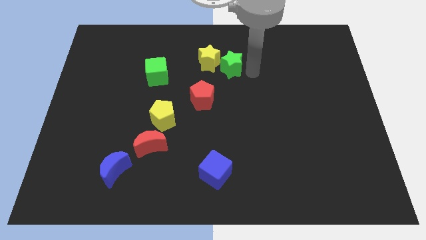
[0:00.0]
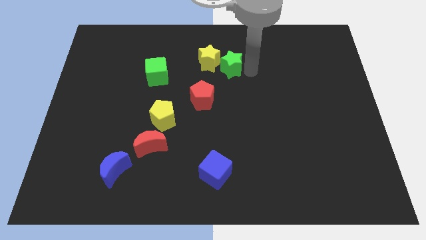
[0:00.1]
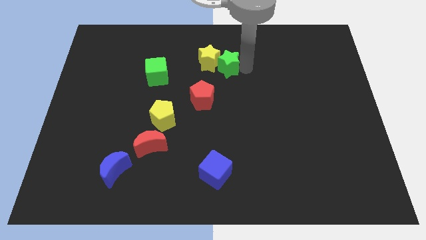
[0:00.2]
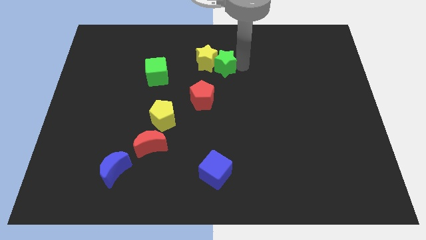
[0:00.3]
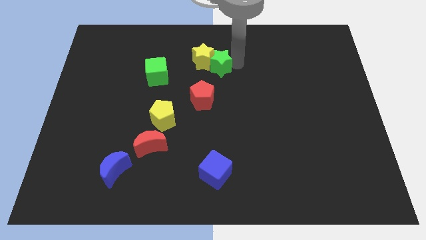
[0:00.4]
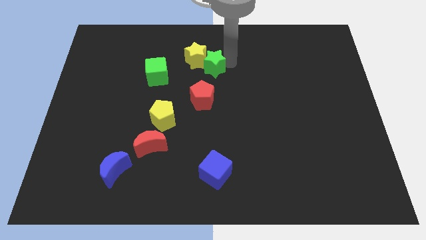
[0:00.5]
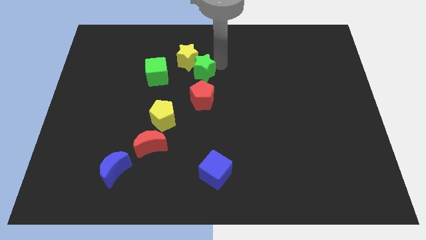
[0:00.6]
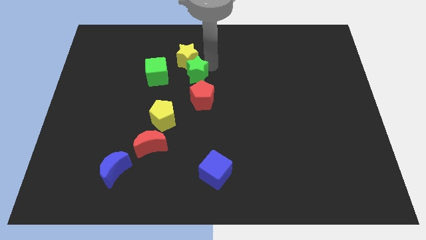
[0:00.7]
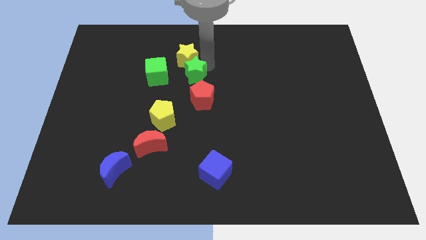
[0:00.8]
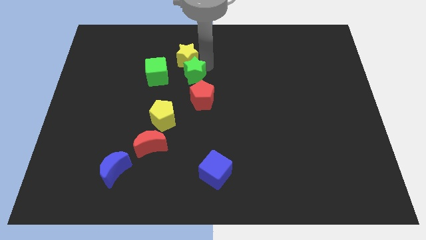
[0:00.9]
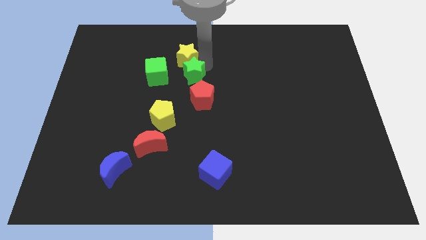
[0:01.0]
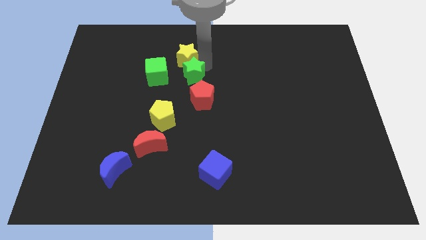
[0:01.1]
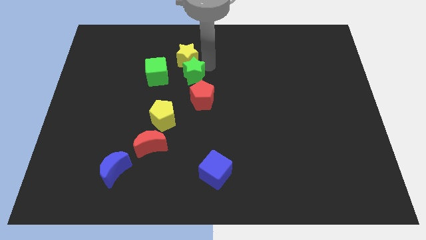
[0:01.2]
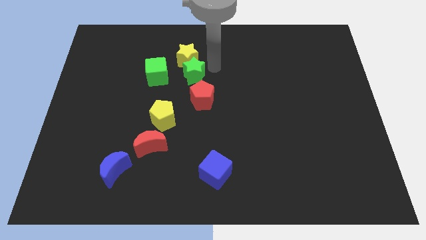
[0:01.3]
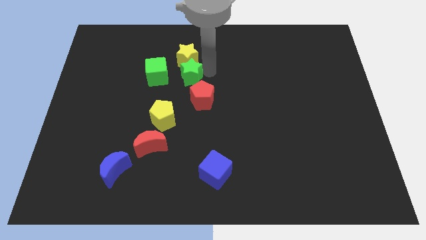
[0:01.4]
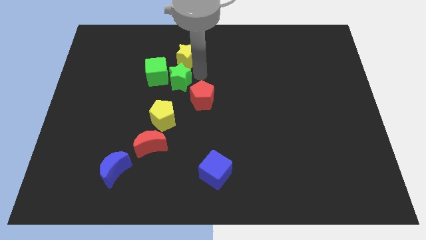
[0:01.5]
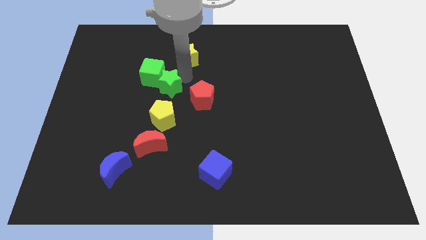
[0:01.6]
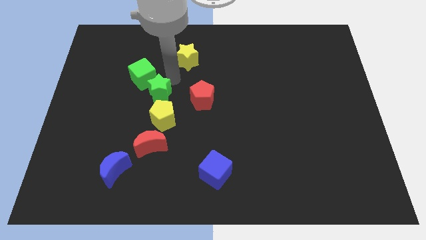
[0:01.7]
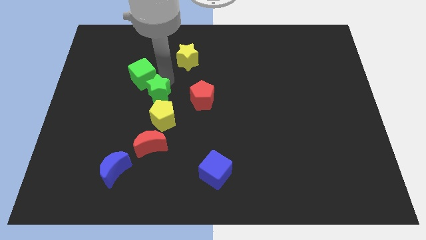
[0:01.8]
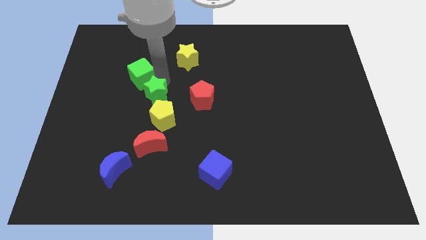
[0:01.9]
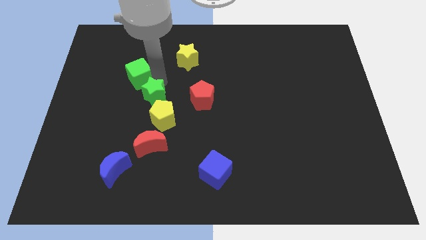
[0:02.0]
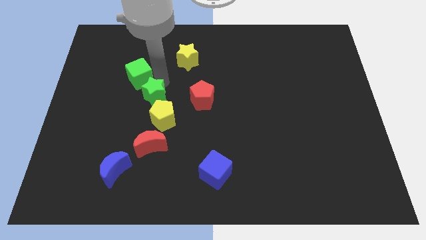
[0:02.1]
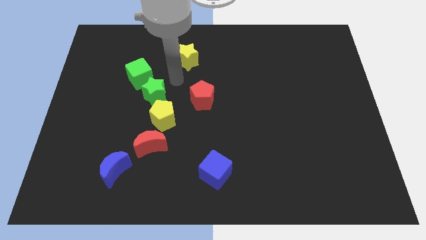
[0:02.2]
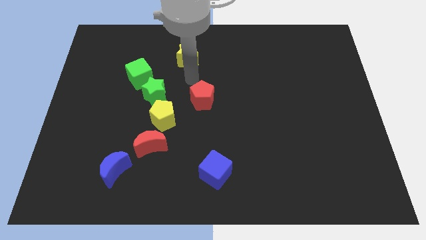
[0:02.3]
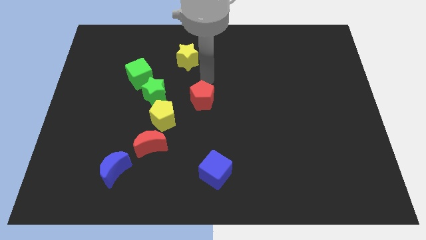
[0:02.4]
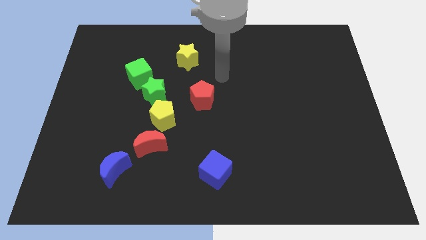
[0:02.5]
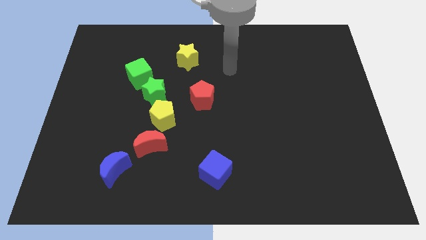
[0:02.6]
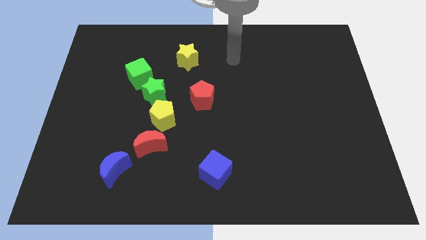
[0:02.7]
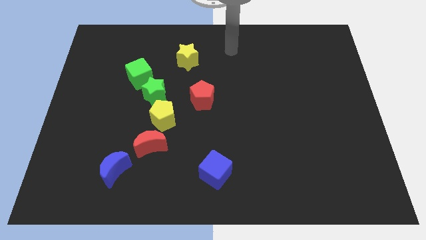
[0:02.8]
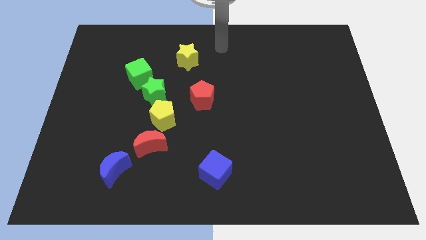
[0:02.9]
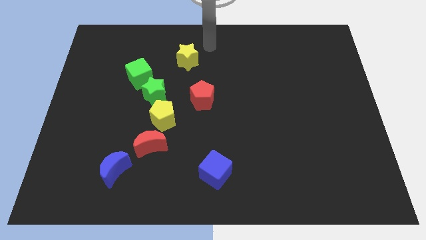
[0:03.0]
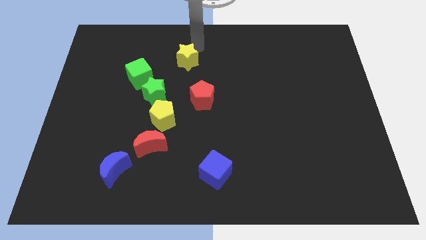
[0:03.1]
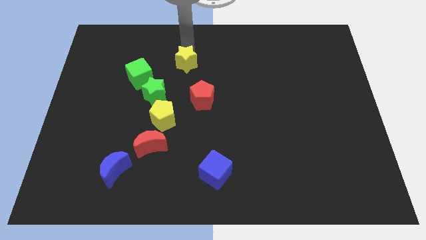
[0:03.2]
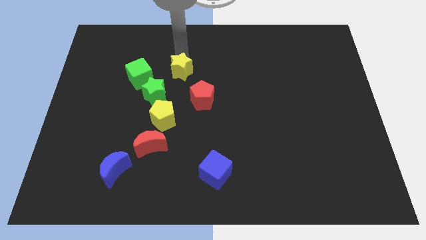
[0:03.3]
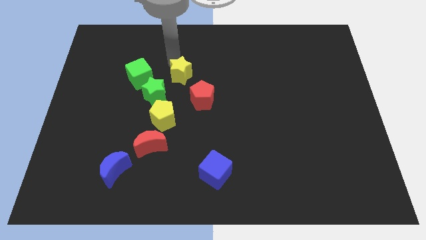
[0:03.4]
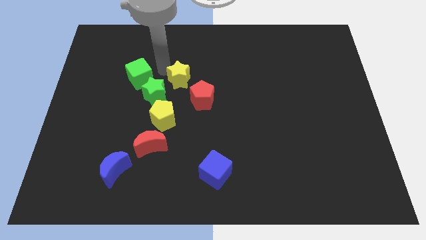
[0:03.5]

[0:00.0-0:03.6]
place green star between green block and yellow pentagon

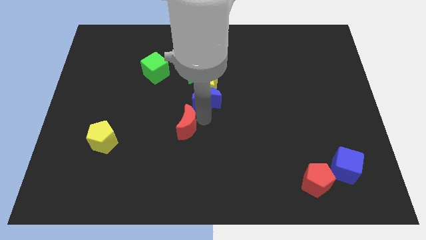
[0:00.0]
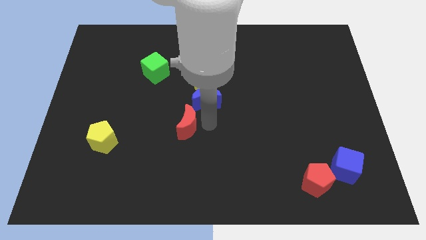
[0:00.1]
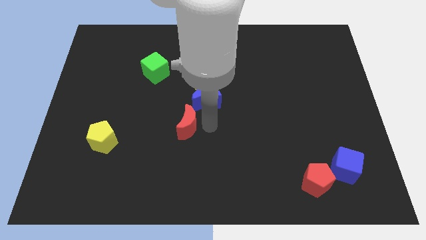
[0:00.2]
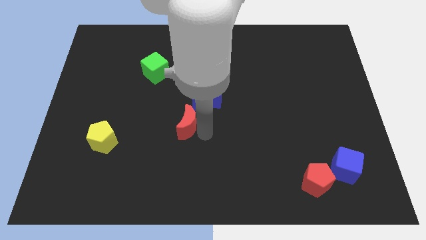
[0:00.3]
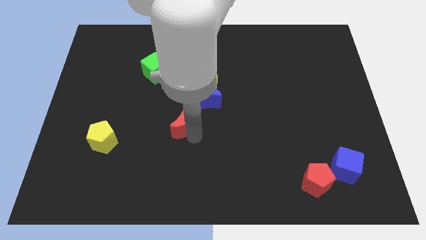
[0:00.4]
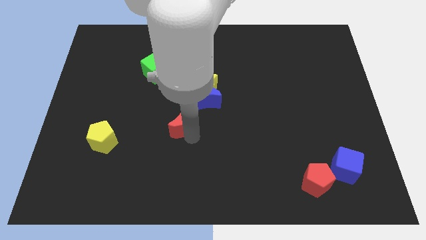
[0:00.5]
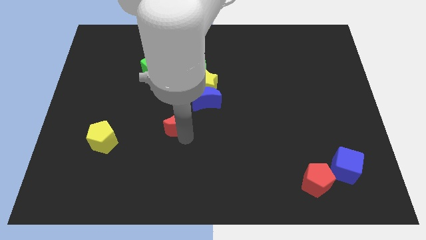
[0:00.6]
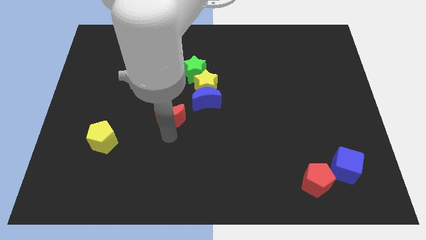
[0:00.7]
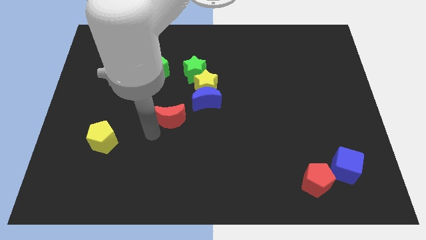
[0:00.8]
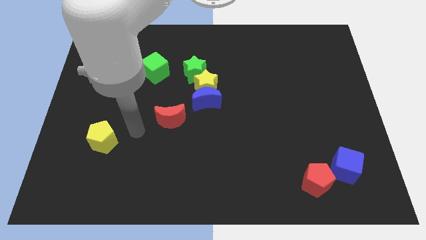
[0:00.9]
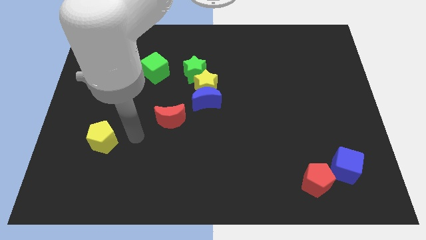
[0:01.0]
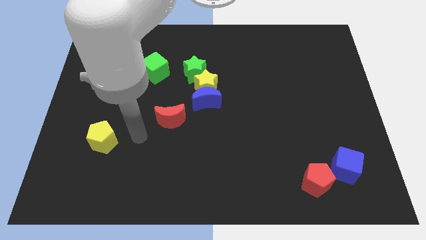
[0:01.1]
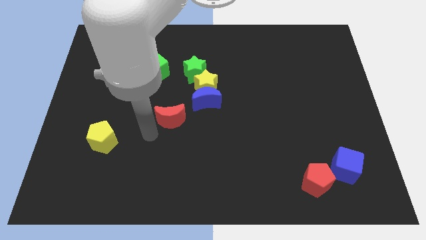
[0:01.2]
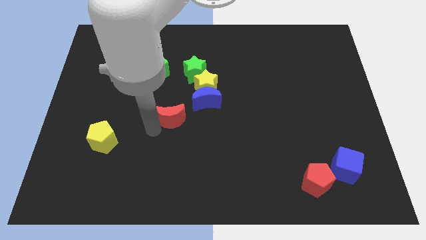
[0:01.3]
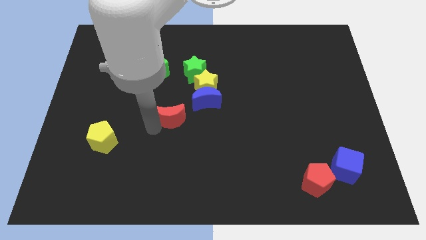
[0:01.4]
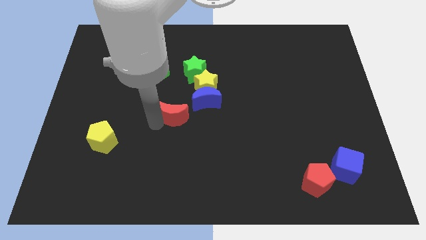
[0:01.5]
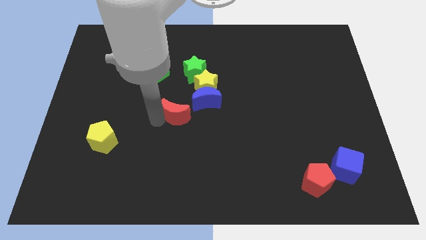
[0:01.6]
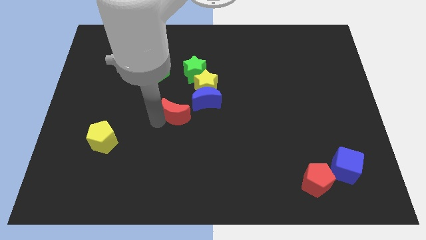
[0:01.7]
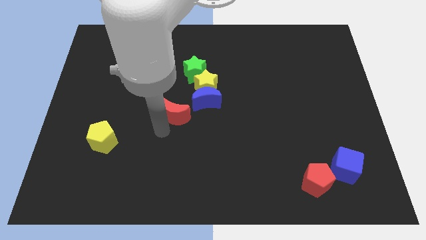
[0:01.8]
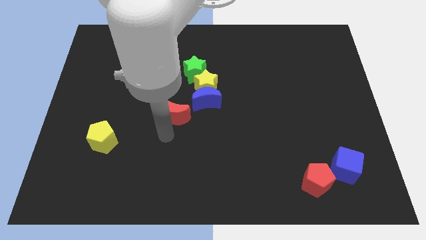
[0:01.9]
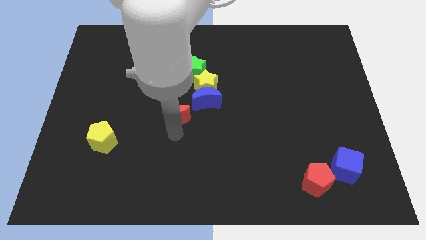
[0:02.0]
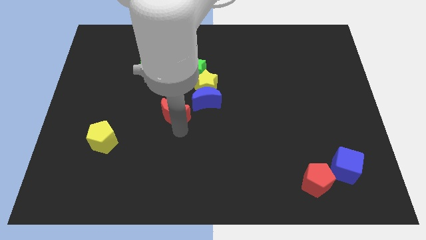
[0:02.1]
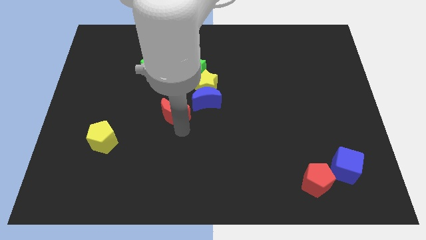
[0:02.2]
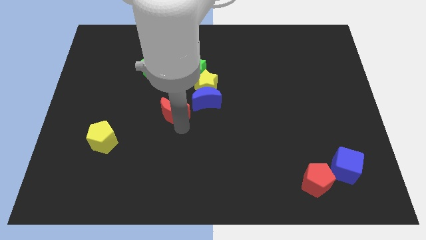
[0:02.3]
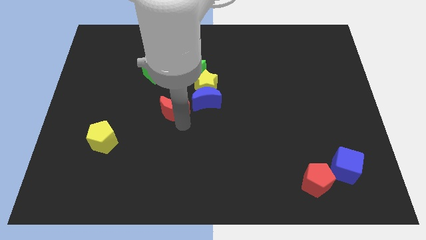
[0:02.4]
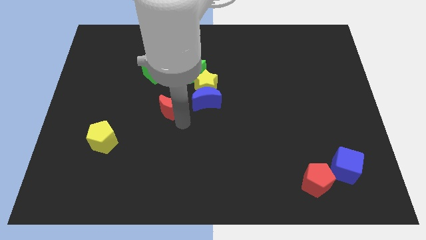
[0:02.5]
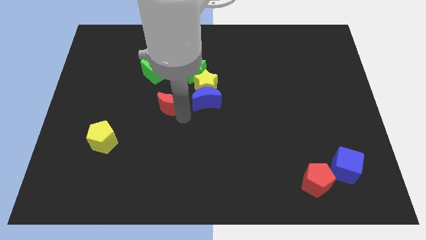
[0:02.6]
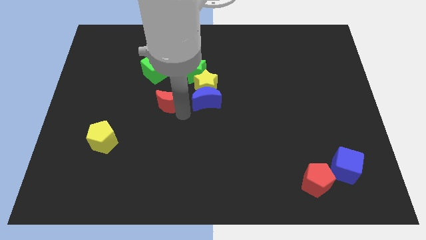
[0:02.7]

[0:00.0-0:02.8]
move the red crescent to the left of the blue moon

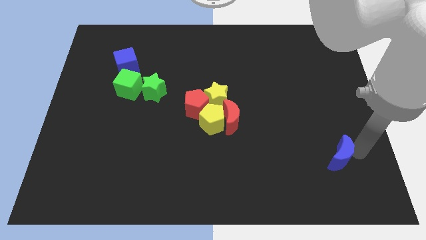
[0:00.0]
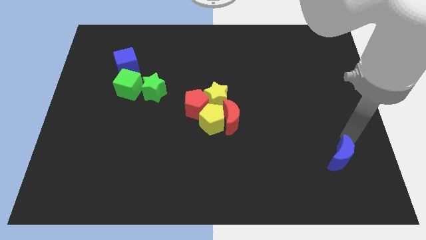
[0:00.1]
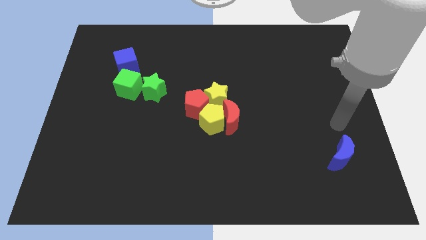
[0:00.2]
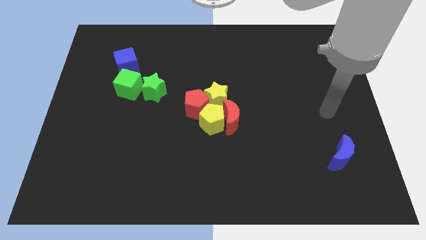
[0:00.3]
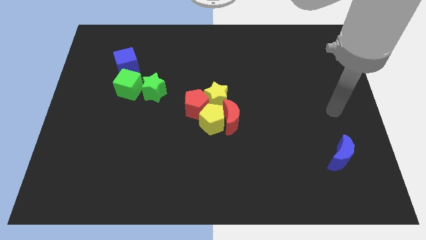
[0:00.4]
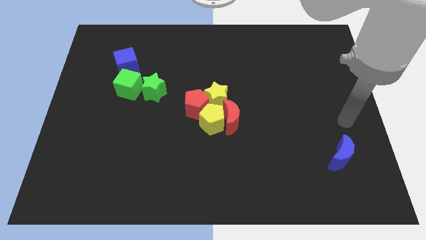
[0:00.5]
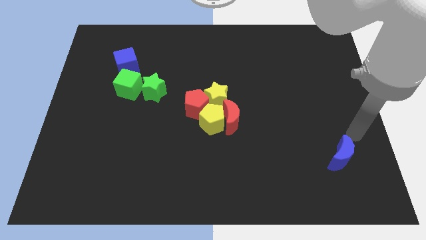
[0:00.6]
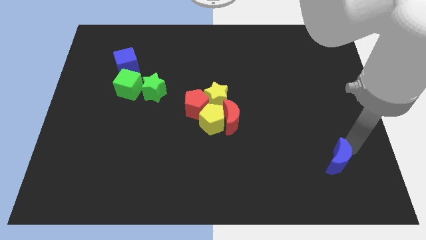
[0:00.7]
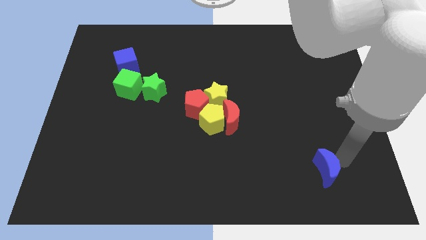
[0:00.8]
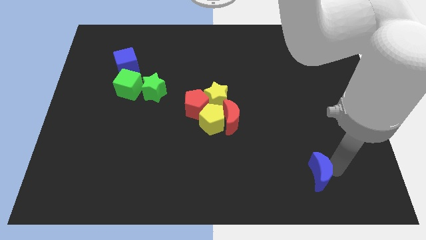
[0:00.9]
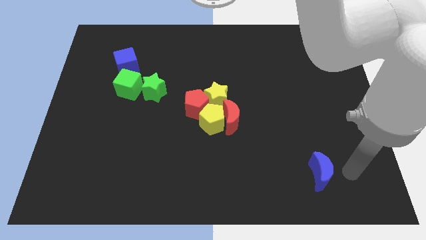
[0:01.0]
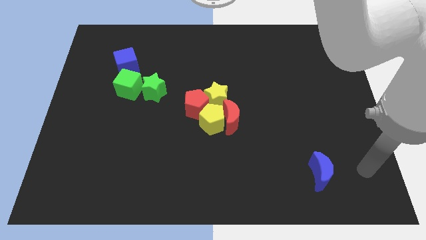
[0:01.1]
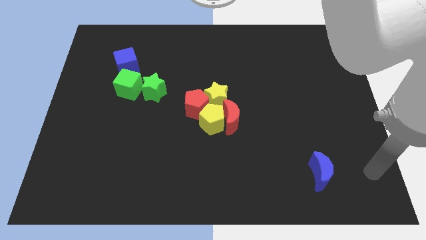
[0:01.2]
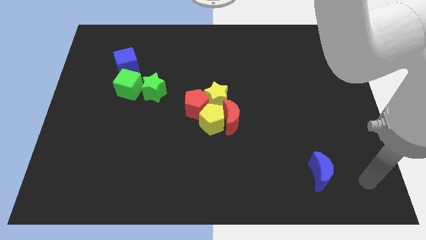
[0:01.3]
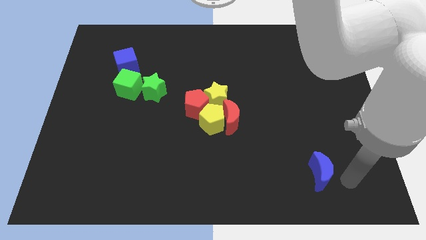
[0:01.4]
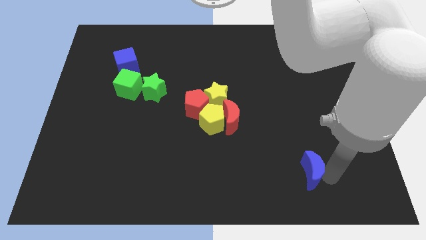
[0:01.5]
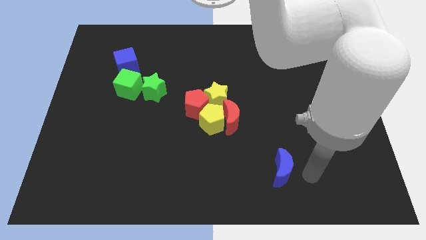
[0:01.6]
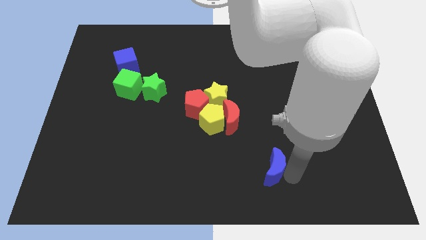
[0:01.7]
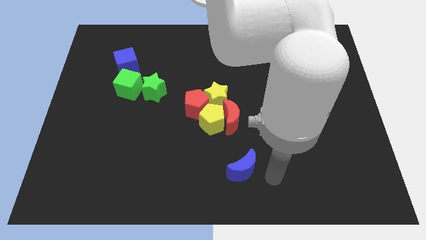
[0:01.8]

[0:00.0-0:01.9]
put the blue moon below the red moon

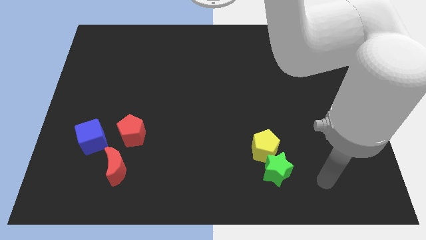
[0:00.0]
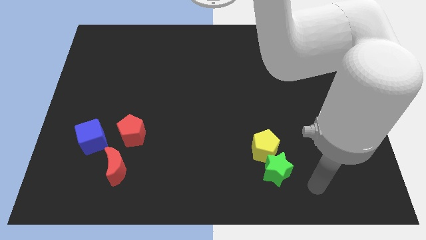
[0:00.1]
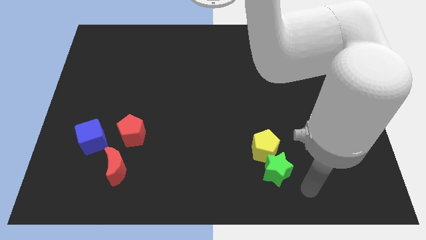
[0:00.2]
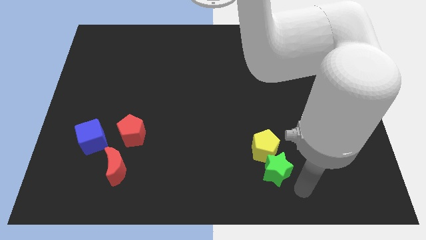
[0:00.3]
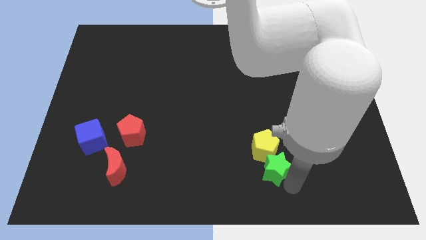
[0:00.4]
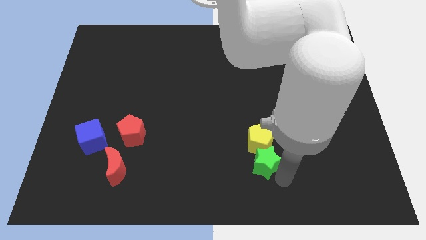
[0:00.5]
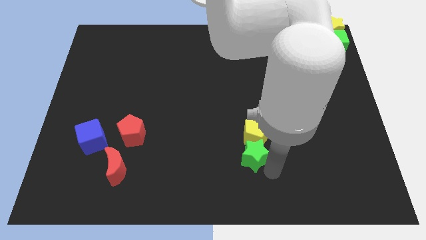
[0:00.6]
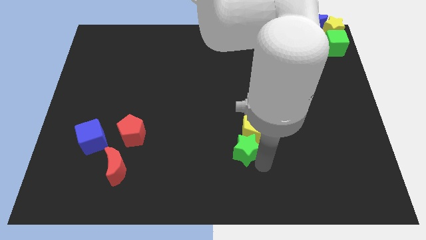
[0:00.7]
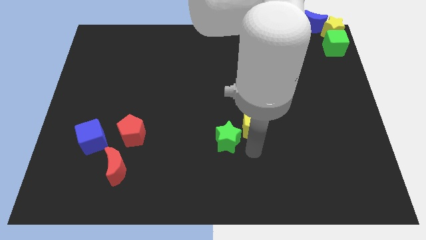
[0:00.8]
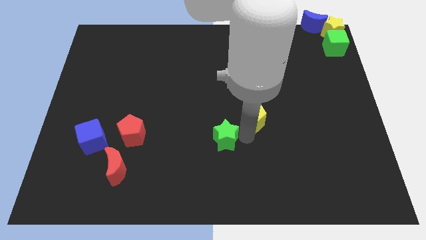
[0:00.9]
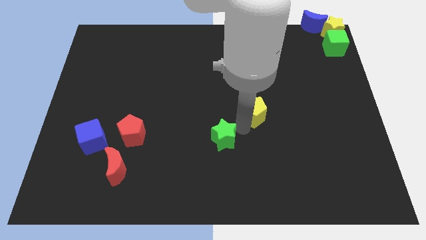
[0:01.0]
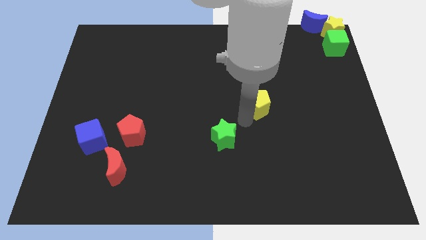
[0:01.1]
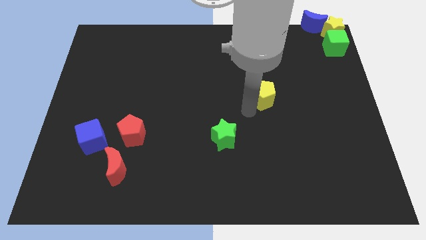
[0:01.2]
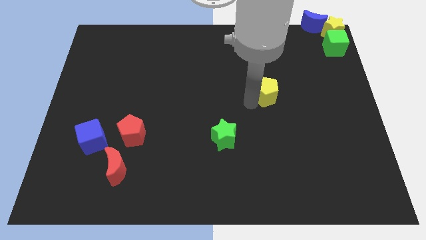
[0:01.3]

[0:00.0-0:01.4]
separate the green star and yellow pentagon
